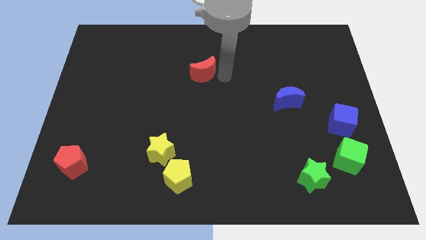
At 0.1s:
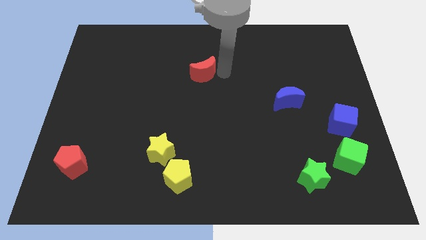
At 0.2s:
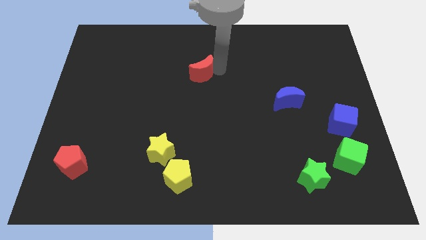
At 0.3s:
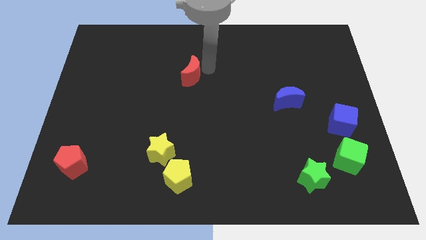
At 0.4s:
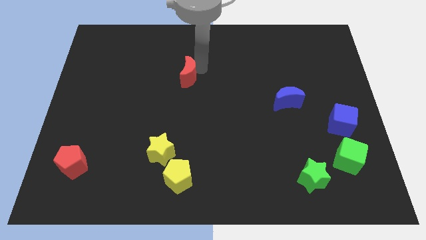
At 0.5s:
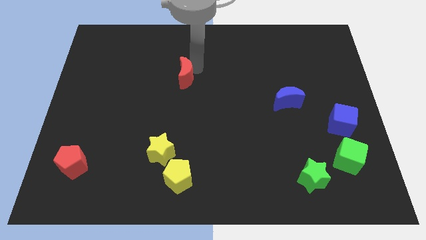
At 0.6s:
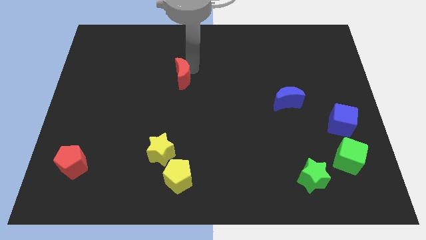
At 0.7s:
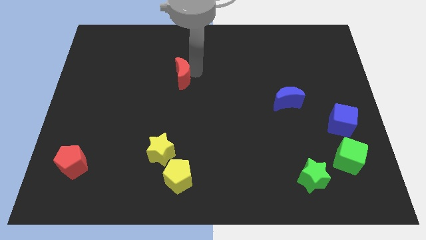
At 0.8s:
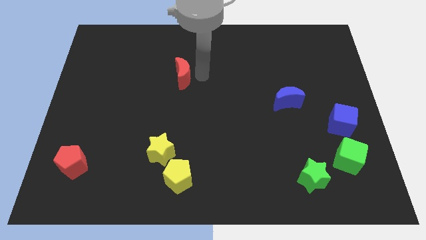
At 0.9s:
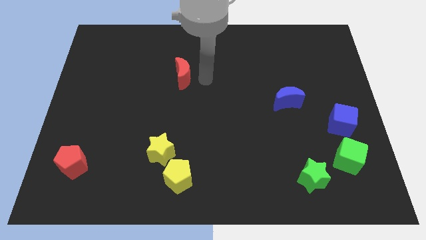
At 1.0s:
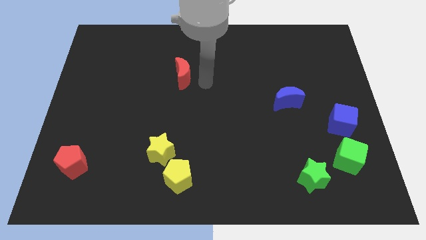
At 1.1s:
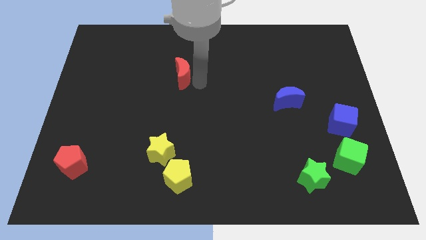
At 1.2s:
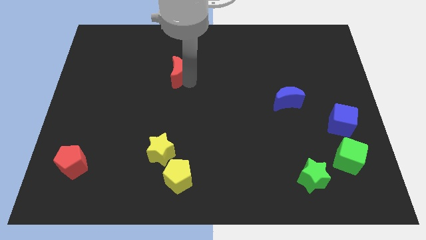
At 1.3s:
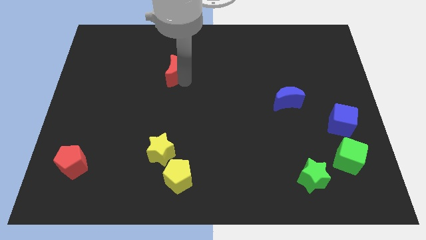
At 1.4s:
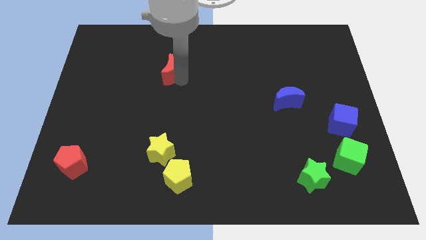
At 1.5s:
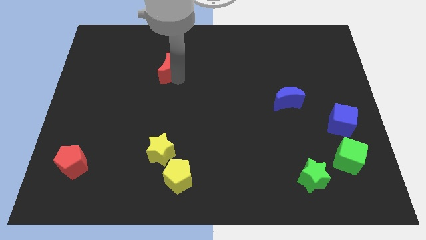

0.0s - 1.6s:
put the red moon vertically above the yellow star

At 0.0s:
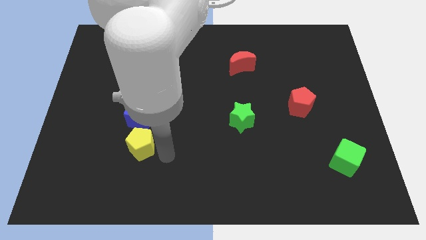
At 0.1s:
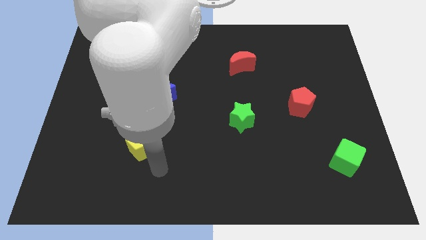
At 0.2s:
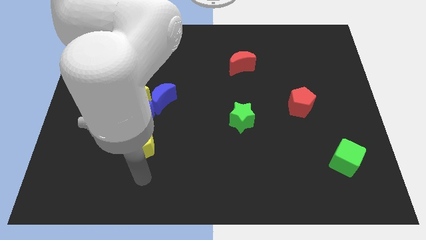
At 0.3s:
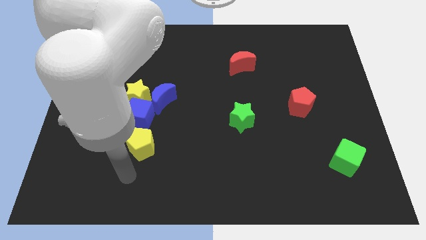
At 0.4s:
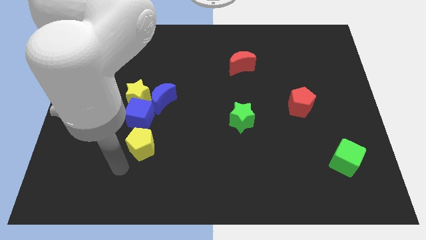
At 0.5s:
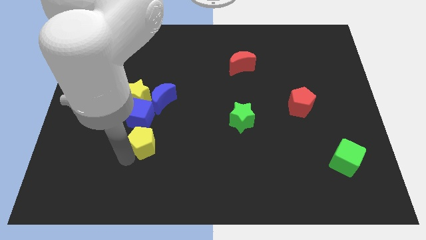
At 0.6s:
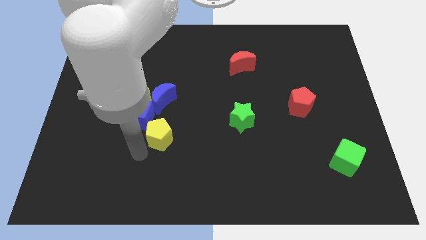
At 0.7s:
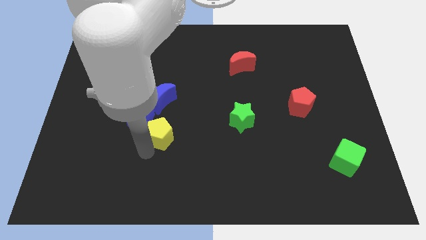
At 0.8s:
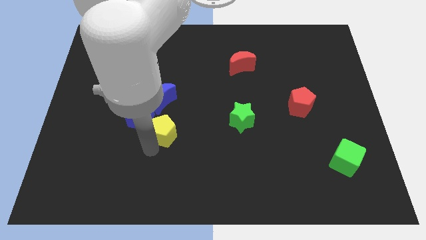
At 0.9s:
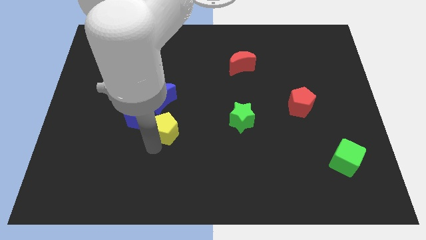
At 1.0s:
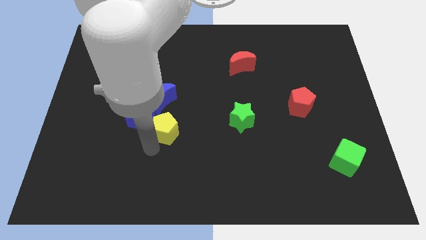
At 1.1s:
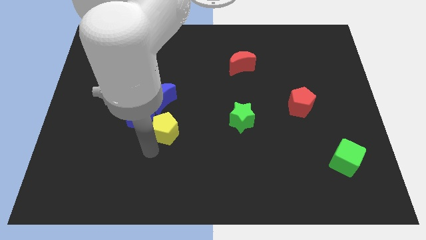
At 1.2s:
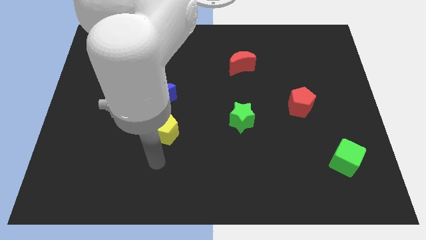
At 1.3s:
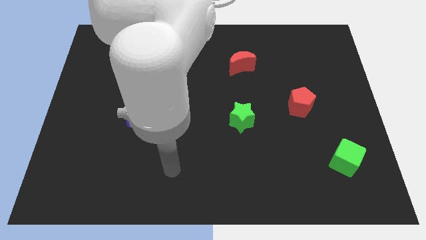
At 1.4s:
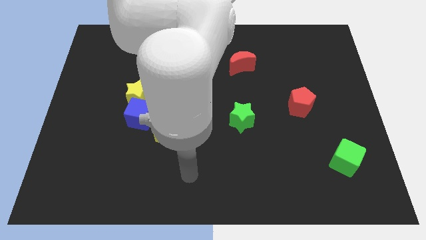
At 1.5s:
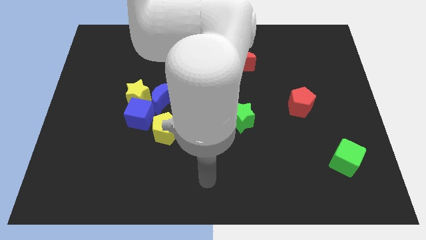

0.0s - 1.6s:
place yellow pentagon to the right of blue cube

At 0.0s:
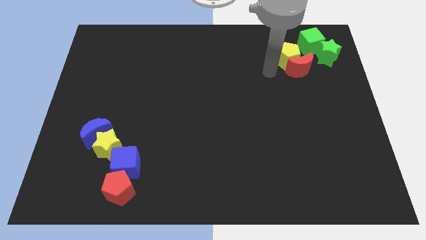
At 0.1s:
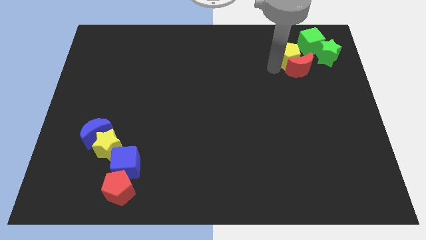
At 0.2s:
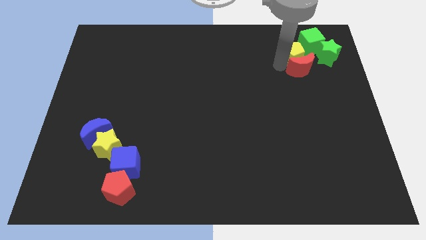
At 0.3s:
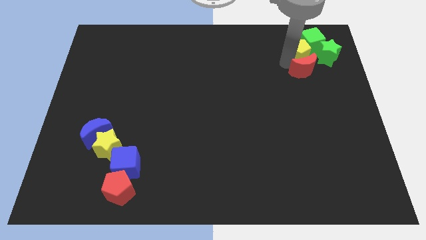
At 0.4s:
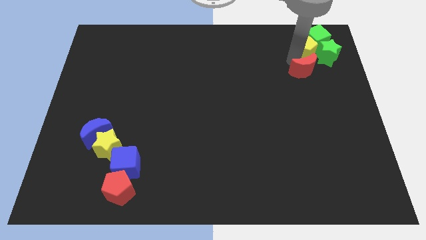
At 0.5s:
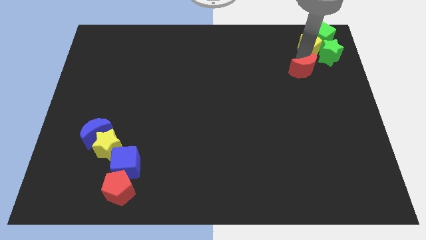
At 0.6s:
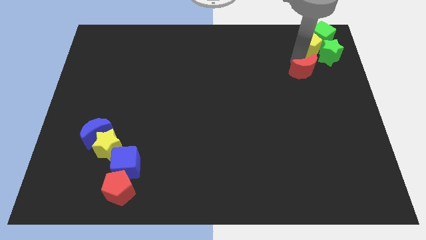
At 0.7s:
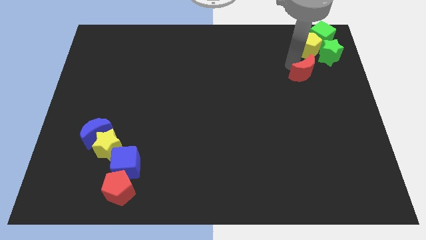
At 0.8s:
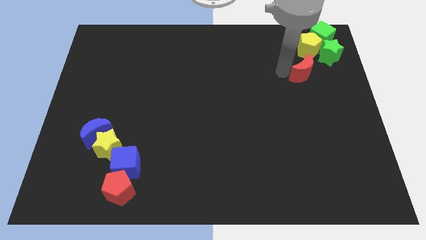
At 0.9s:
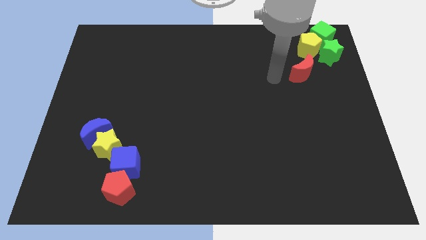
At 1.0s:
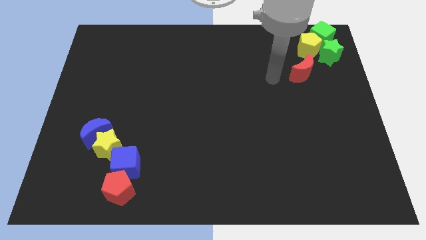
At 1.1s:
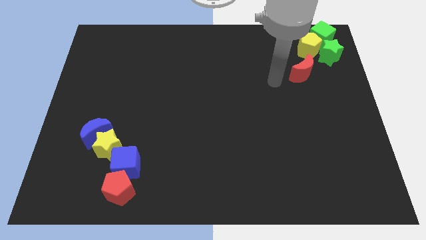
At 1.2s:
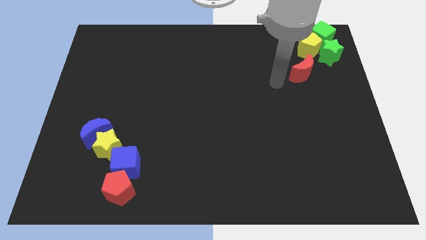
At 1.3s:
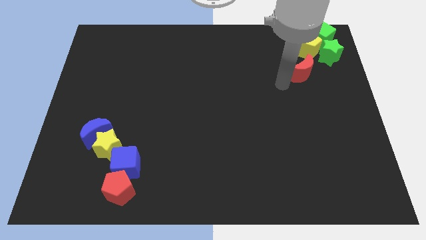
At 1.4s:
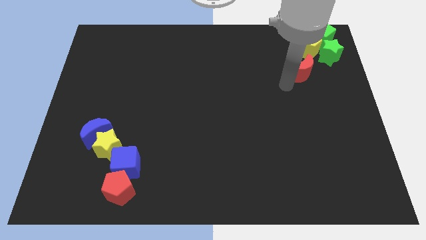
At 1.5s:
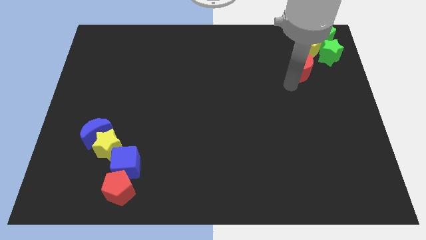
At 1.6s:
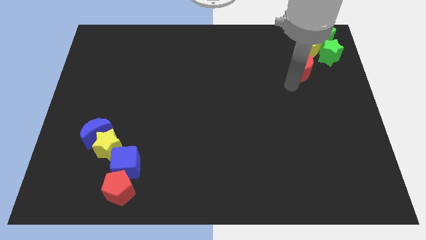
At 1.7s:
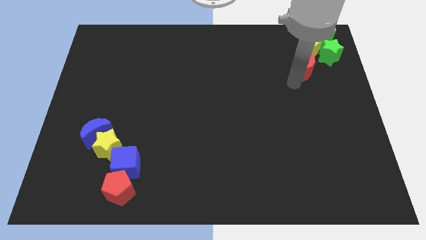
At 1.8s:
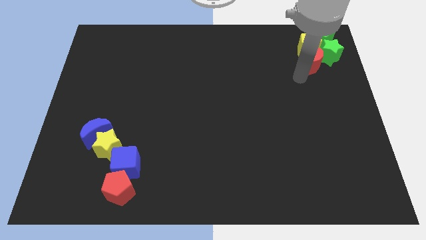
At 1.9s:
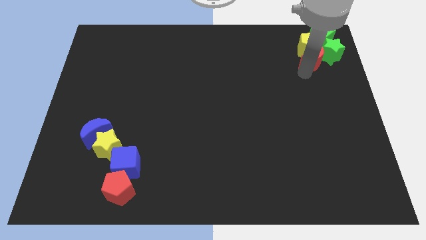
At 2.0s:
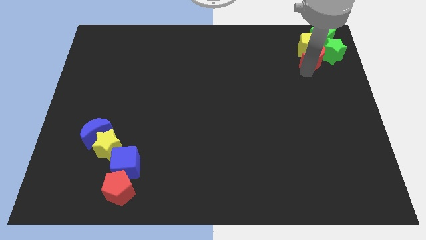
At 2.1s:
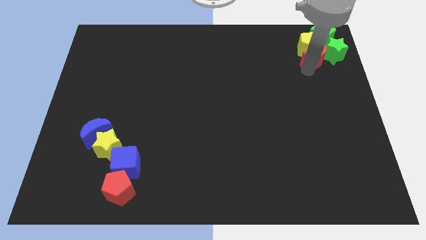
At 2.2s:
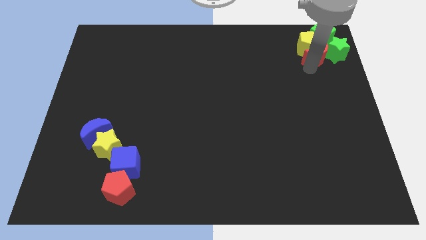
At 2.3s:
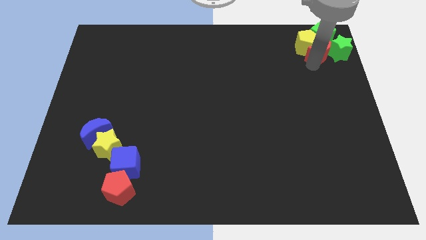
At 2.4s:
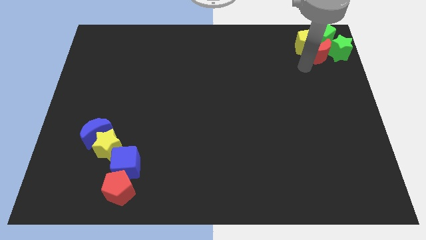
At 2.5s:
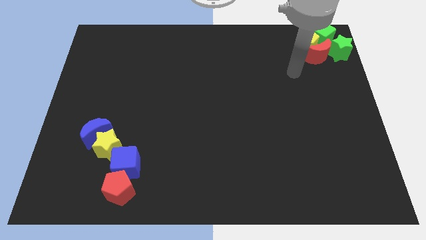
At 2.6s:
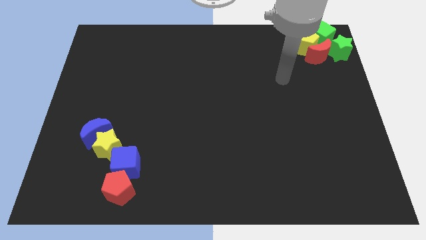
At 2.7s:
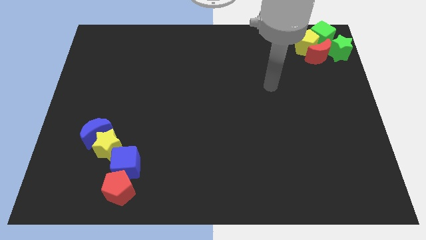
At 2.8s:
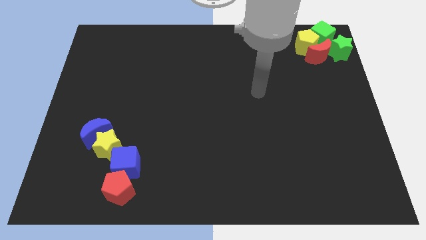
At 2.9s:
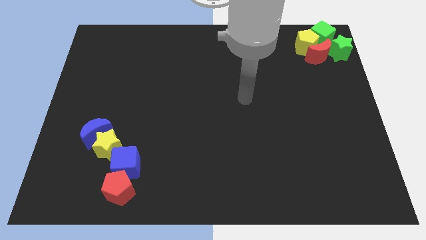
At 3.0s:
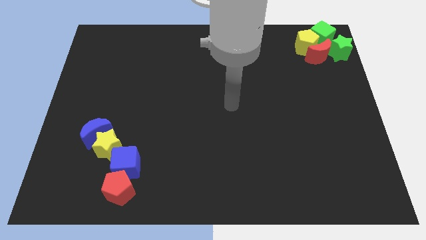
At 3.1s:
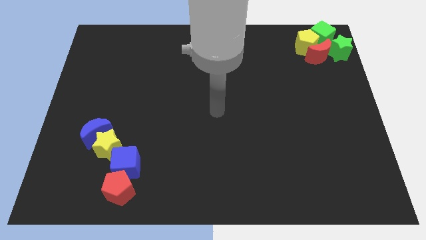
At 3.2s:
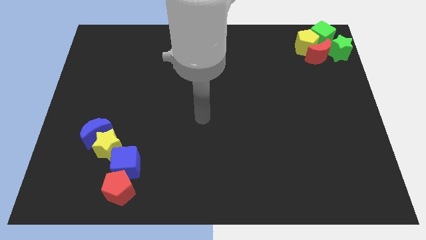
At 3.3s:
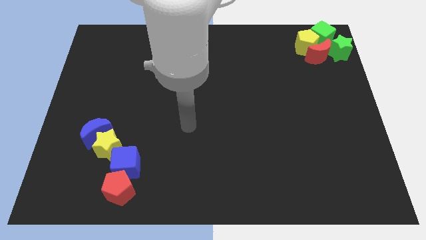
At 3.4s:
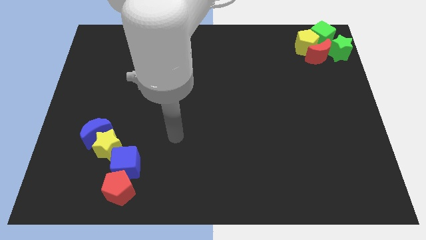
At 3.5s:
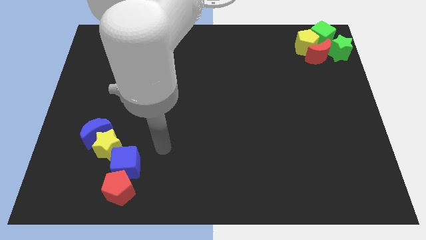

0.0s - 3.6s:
push the red crescent into the group of blocks at the top right side of the board

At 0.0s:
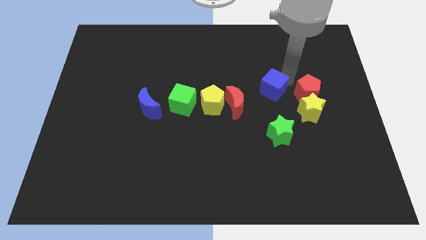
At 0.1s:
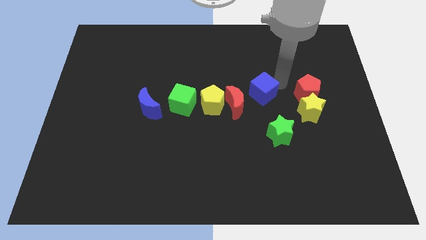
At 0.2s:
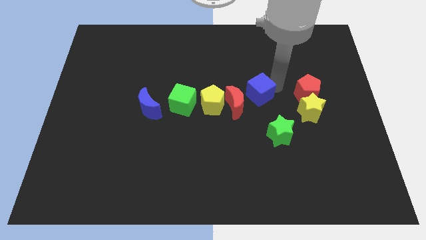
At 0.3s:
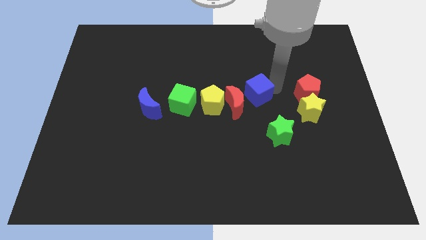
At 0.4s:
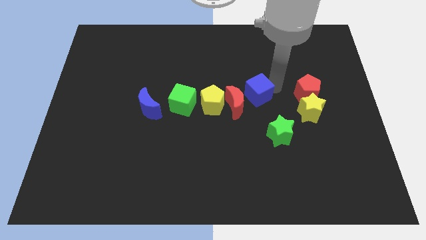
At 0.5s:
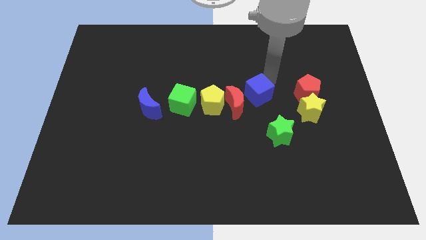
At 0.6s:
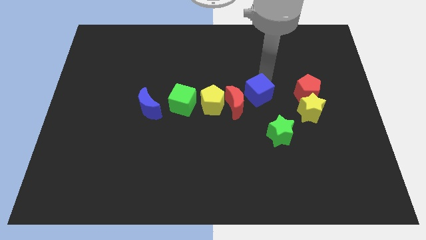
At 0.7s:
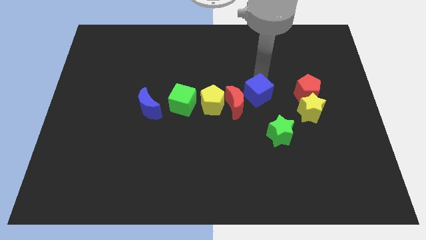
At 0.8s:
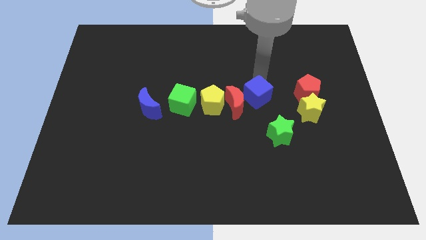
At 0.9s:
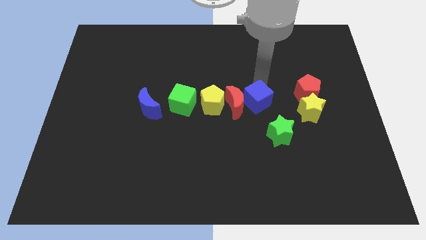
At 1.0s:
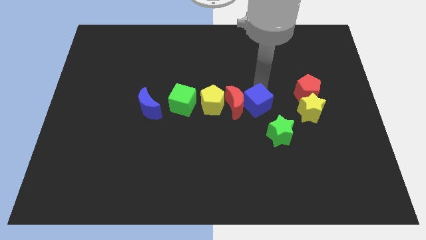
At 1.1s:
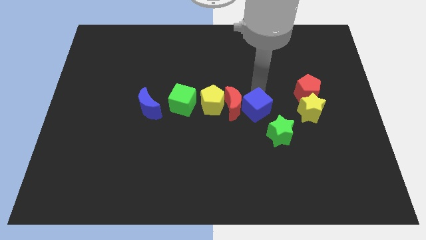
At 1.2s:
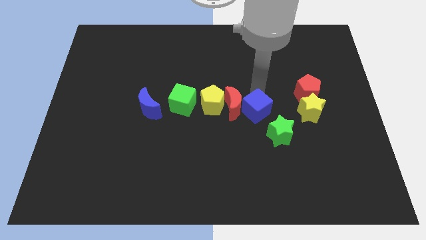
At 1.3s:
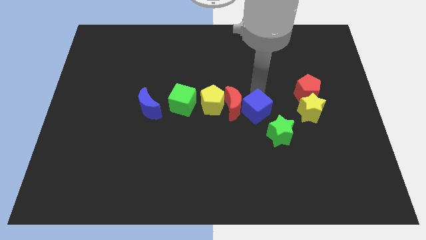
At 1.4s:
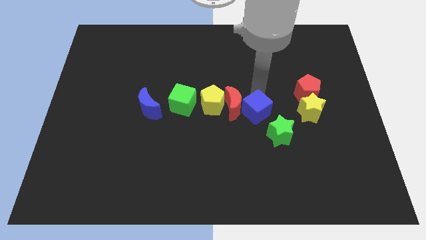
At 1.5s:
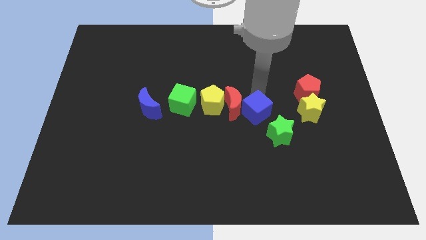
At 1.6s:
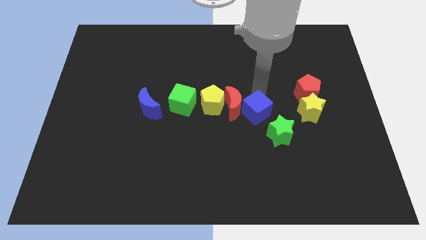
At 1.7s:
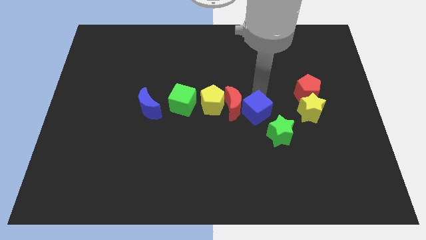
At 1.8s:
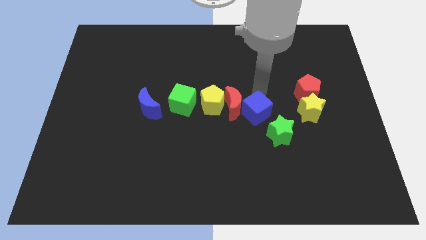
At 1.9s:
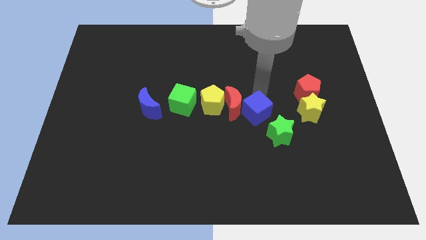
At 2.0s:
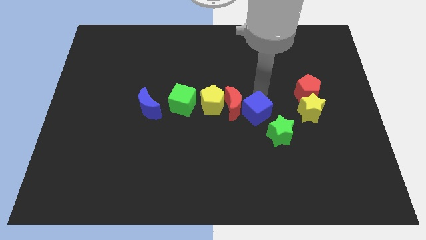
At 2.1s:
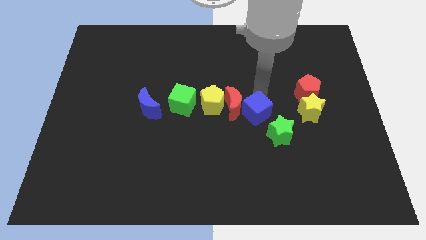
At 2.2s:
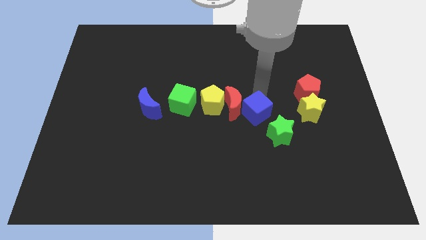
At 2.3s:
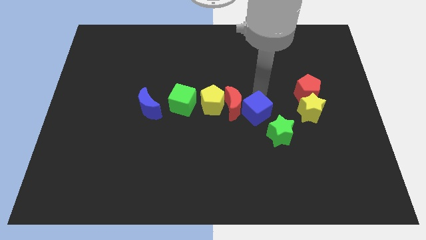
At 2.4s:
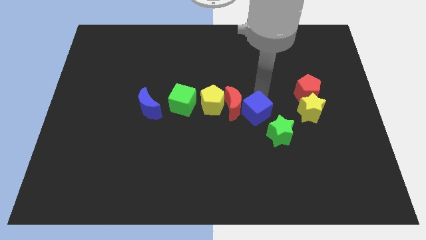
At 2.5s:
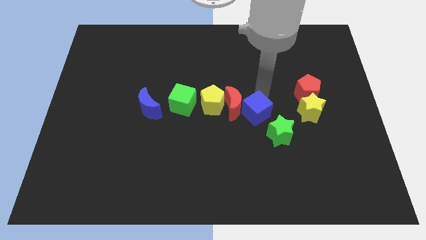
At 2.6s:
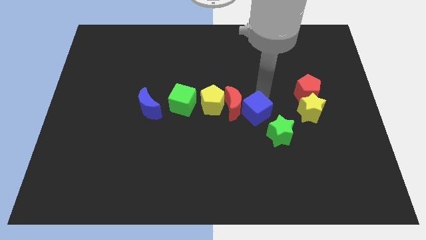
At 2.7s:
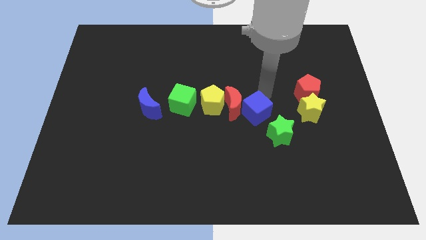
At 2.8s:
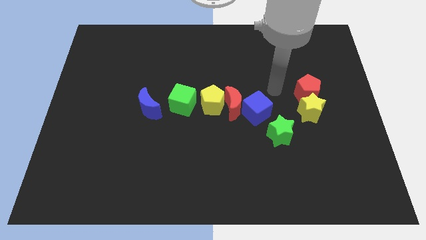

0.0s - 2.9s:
place the blue cube left to the yellow star
